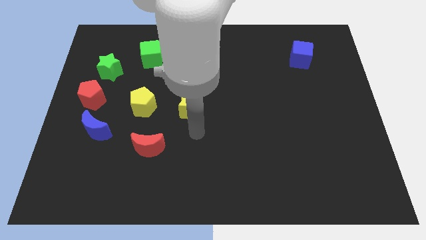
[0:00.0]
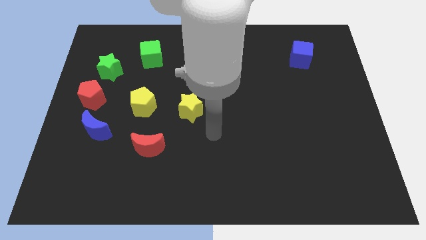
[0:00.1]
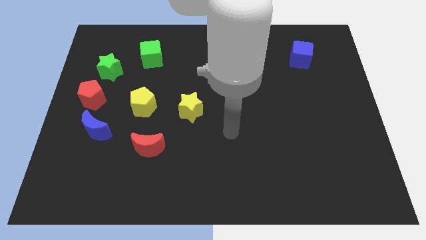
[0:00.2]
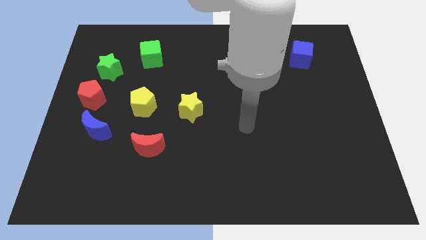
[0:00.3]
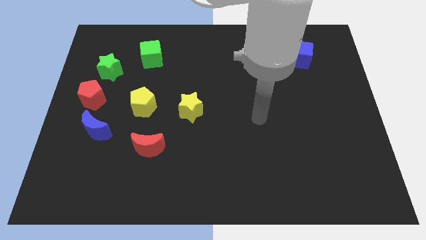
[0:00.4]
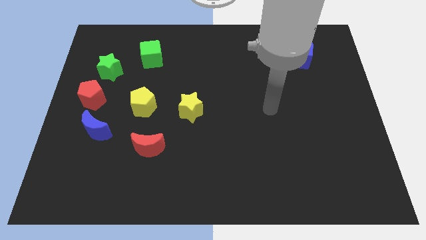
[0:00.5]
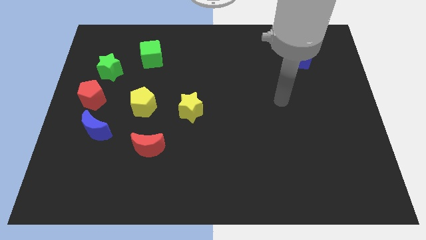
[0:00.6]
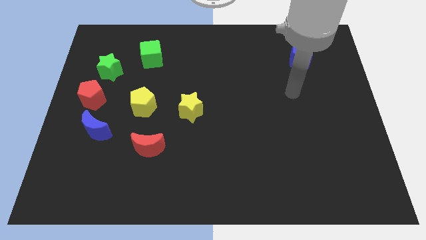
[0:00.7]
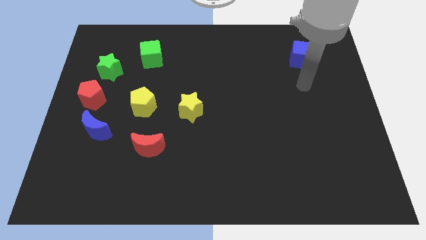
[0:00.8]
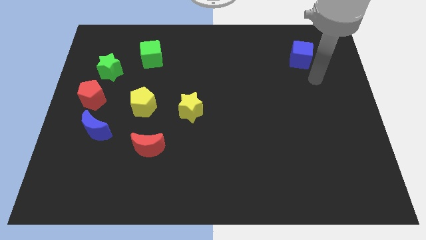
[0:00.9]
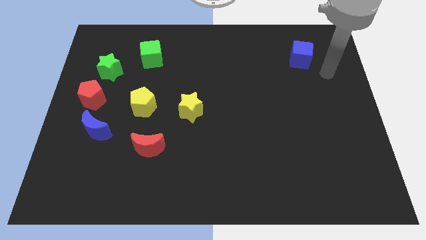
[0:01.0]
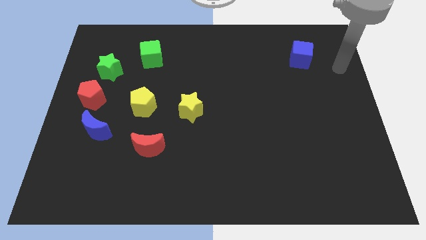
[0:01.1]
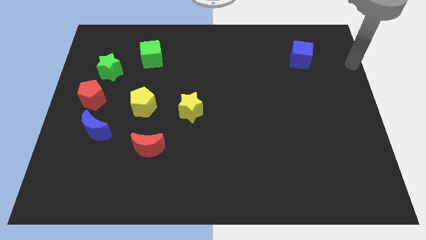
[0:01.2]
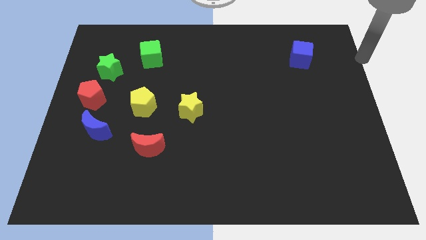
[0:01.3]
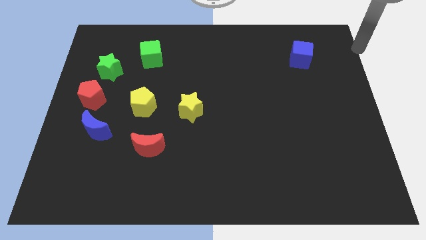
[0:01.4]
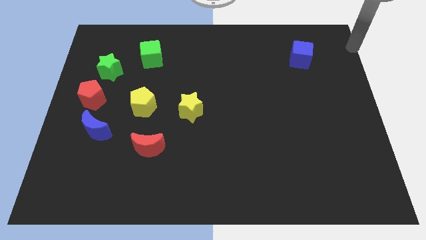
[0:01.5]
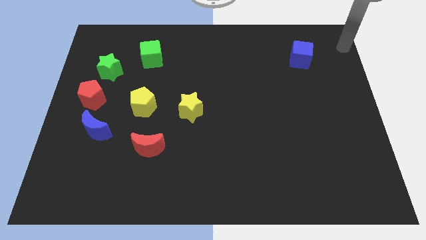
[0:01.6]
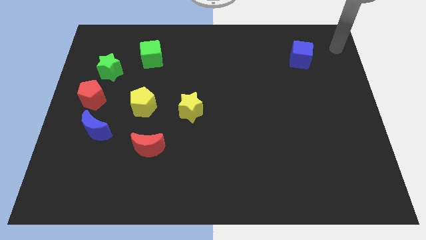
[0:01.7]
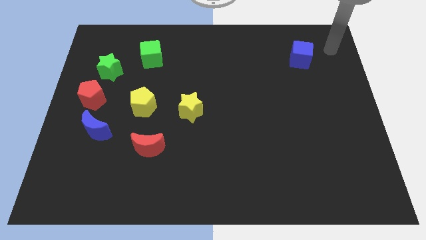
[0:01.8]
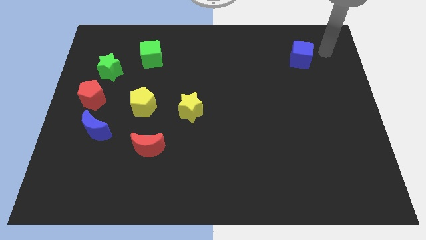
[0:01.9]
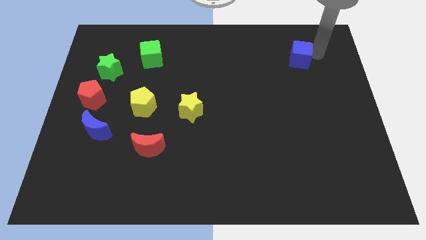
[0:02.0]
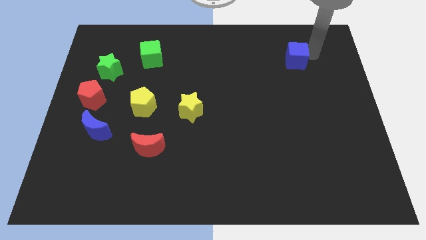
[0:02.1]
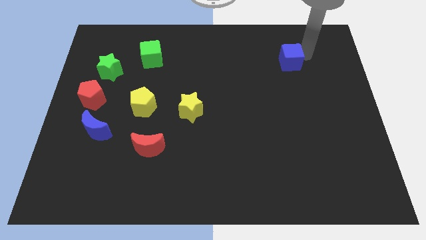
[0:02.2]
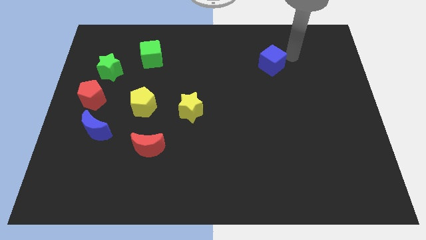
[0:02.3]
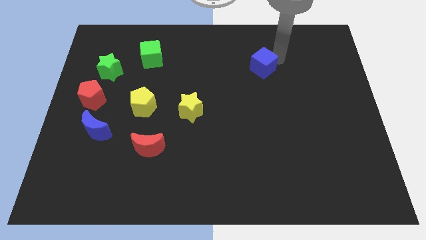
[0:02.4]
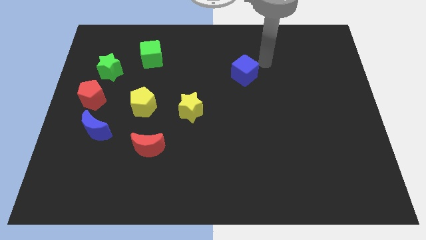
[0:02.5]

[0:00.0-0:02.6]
move blue moon slightly towards left

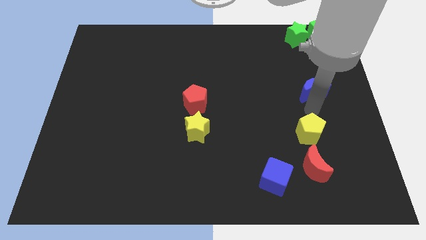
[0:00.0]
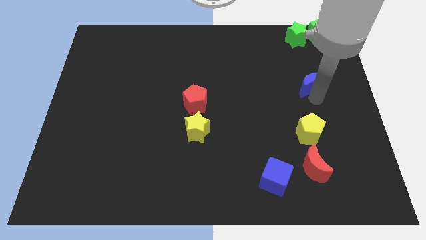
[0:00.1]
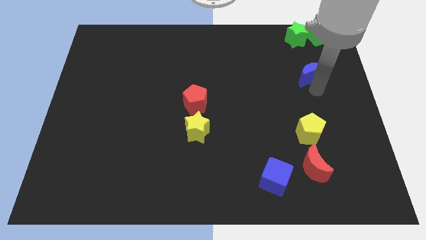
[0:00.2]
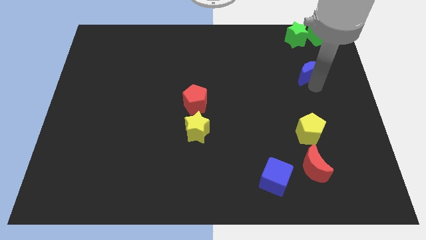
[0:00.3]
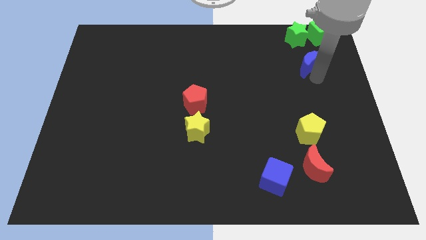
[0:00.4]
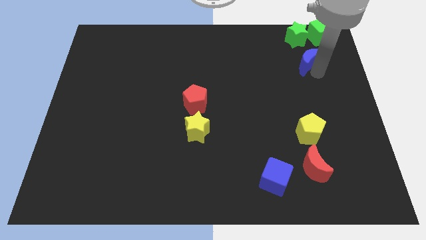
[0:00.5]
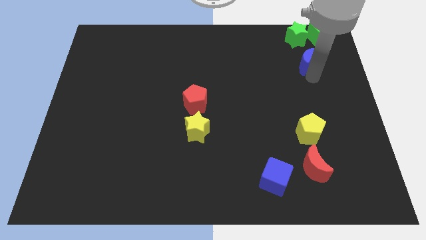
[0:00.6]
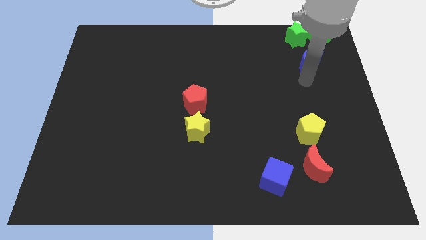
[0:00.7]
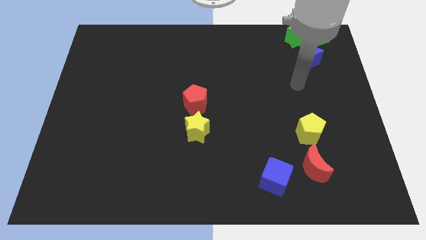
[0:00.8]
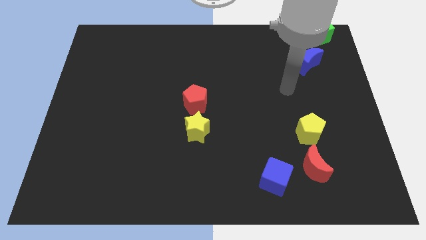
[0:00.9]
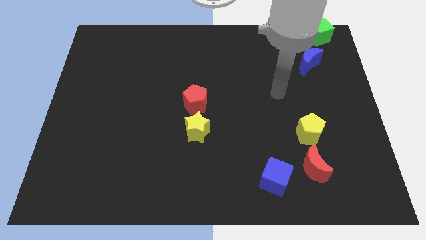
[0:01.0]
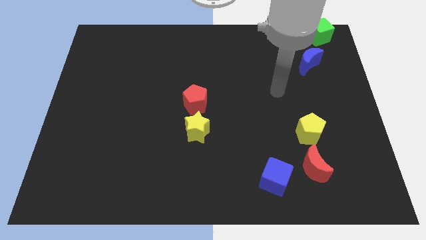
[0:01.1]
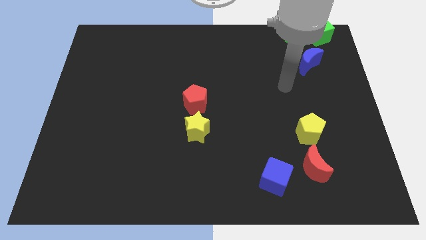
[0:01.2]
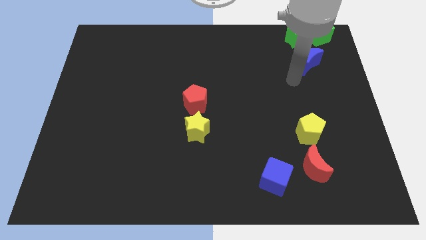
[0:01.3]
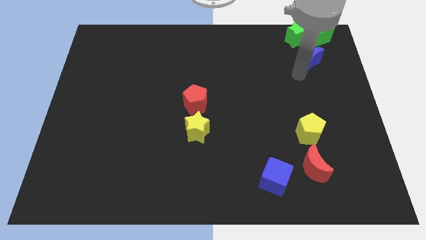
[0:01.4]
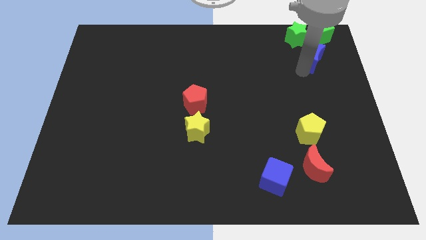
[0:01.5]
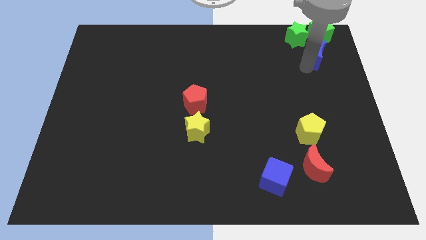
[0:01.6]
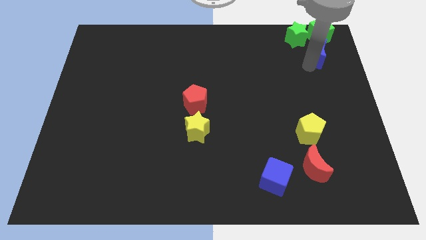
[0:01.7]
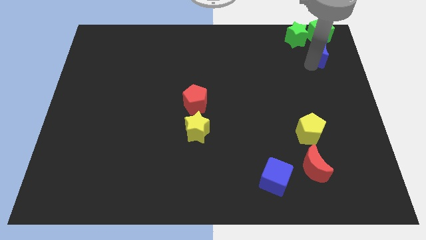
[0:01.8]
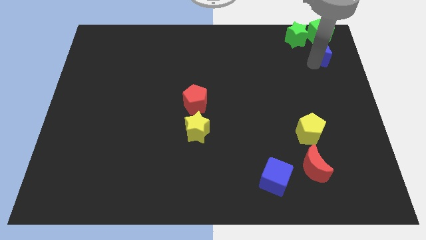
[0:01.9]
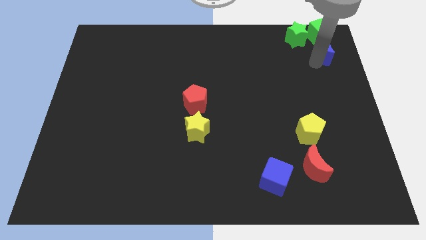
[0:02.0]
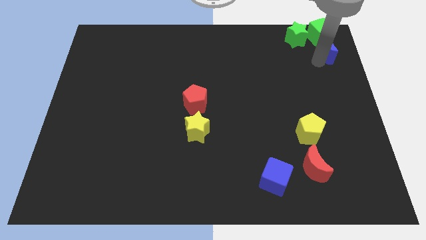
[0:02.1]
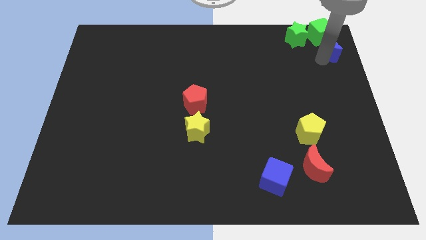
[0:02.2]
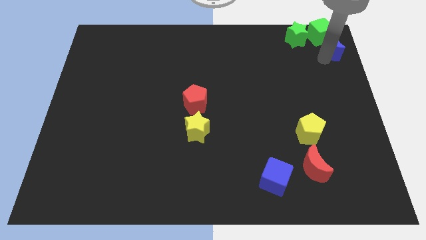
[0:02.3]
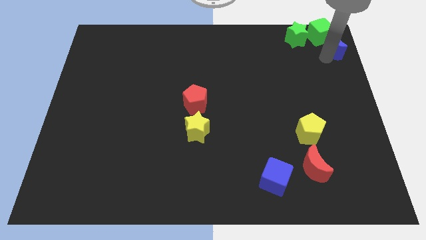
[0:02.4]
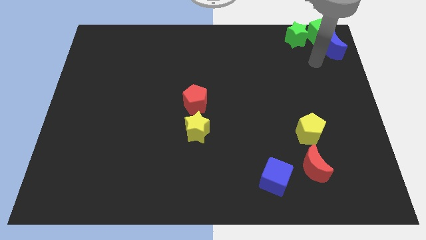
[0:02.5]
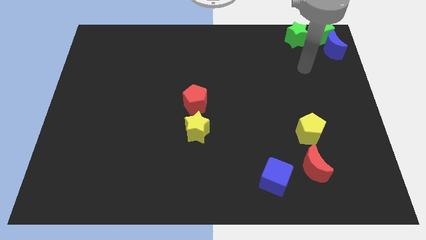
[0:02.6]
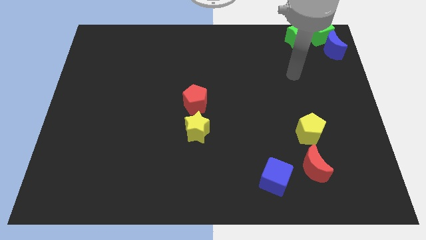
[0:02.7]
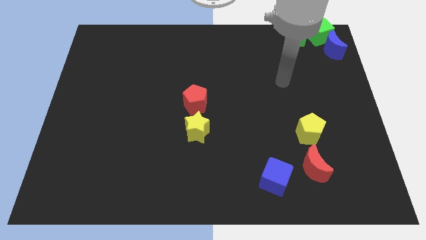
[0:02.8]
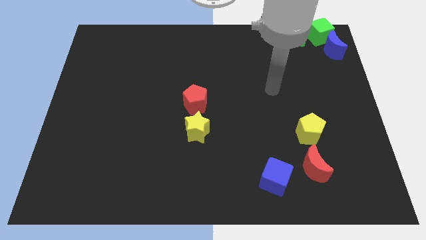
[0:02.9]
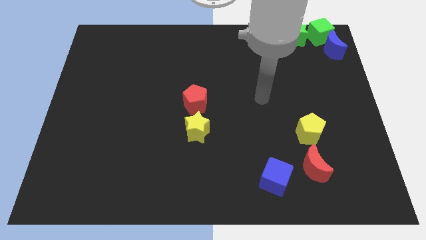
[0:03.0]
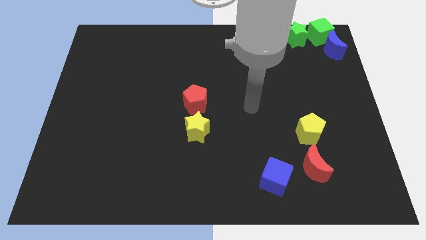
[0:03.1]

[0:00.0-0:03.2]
slide the blue crescent slightly towards the green cube

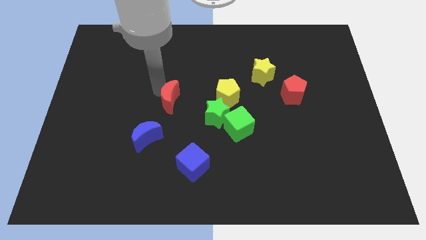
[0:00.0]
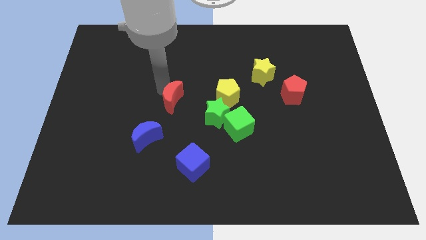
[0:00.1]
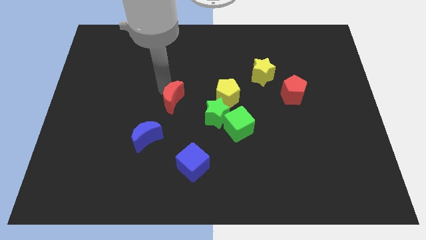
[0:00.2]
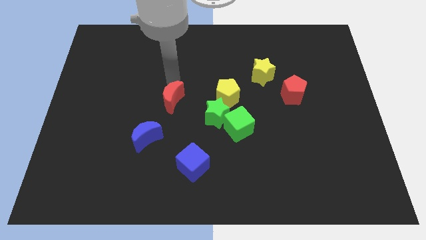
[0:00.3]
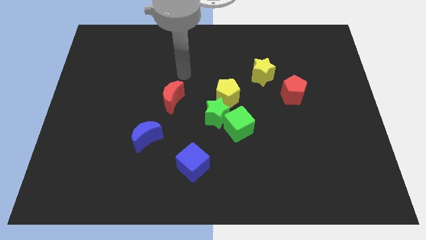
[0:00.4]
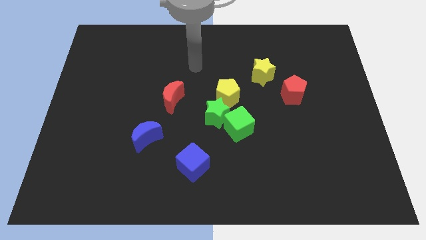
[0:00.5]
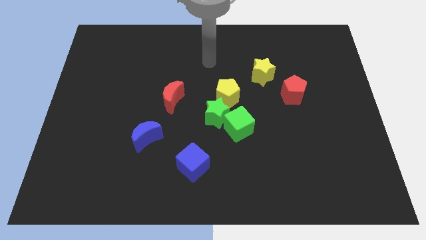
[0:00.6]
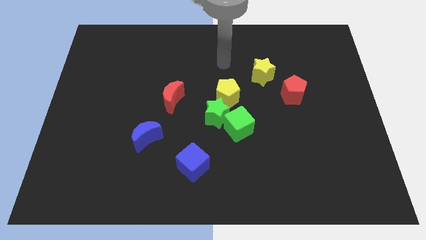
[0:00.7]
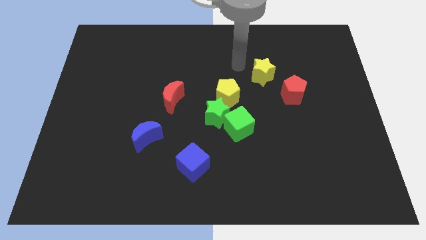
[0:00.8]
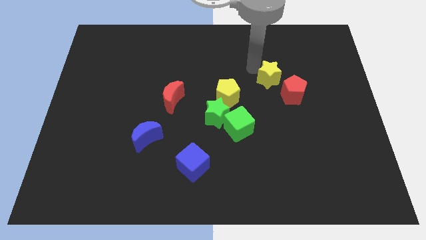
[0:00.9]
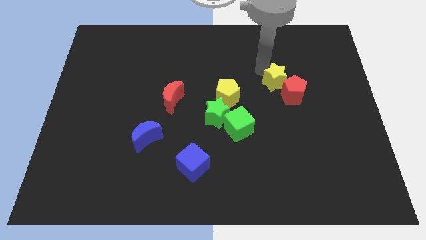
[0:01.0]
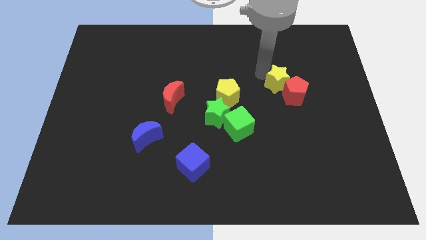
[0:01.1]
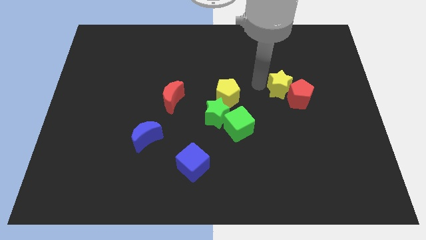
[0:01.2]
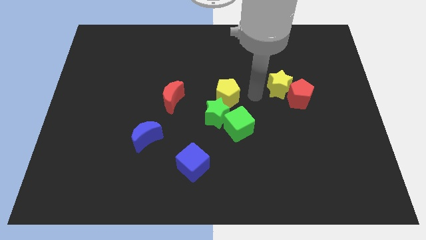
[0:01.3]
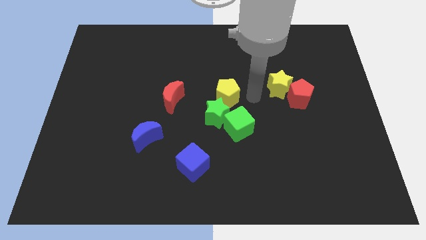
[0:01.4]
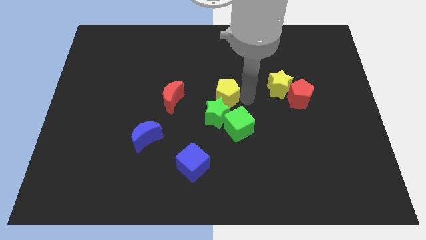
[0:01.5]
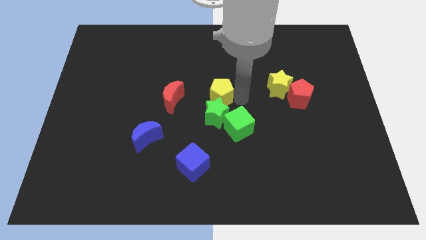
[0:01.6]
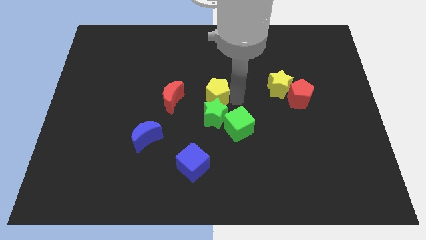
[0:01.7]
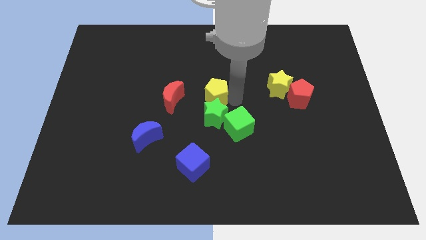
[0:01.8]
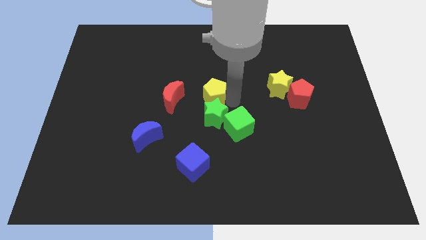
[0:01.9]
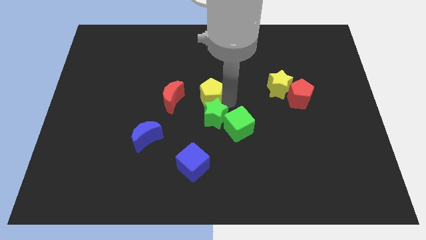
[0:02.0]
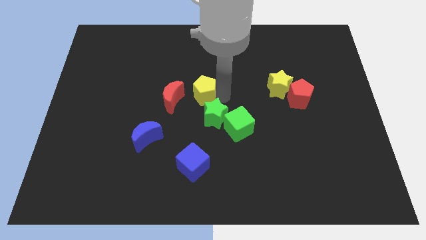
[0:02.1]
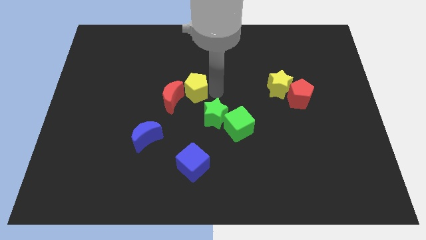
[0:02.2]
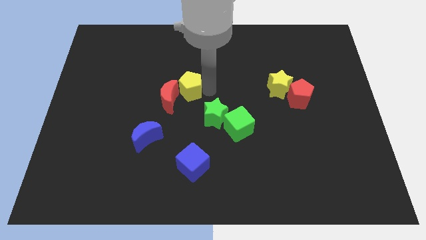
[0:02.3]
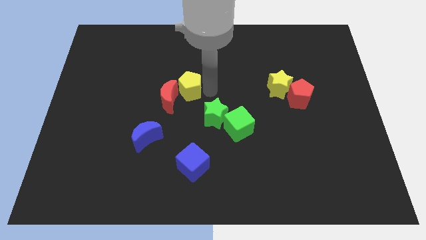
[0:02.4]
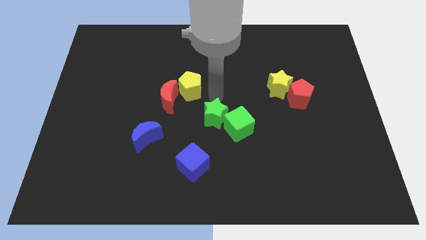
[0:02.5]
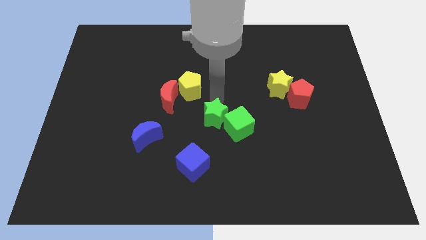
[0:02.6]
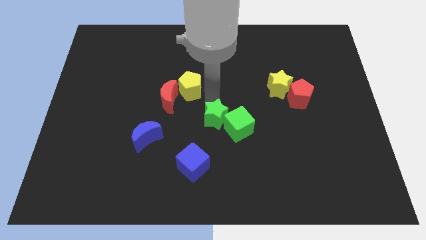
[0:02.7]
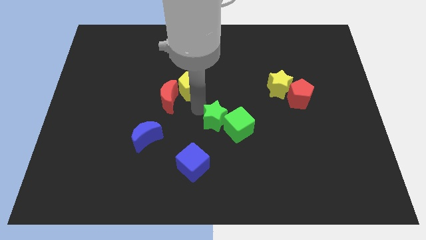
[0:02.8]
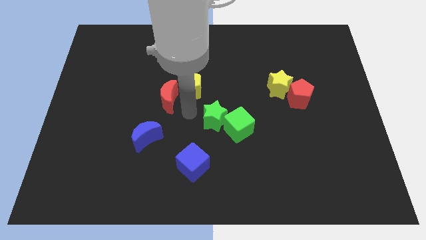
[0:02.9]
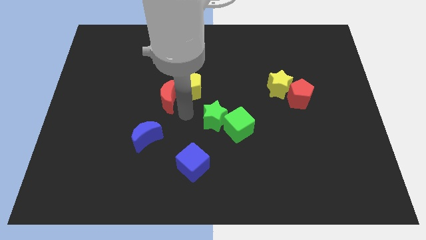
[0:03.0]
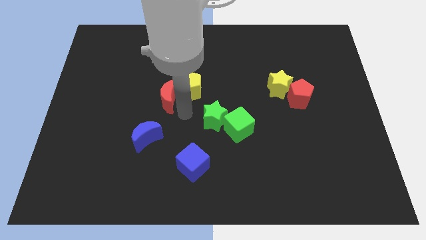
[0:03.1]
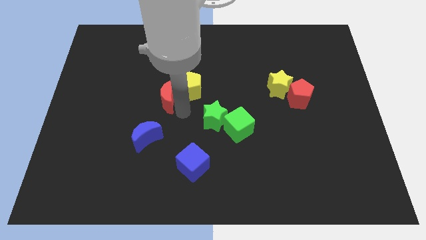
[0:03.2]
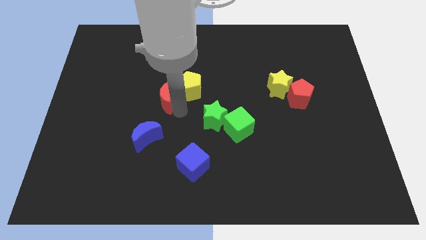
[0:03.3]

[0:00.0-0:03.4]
push both the yellow blocks into the both red blocks
